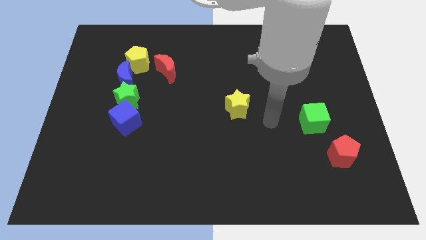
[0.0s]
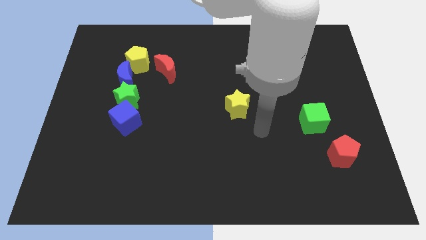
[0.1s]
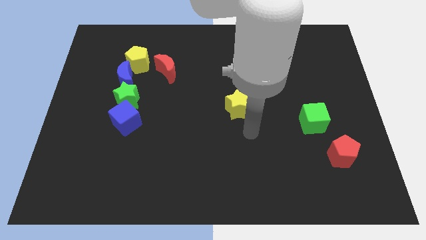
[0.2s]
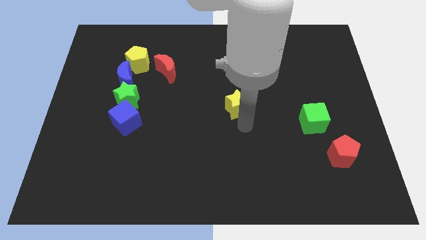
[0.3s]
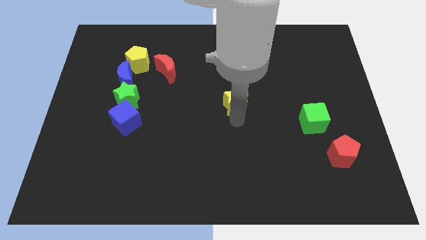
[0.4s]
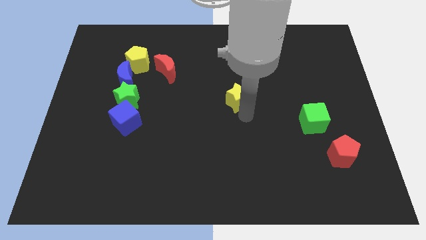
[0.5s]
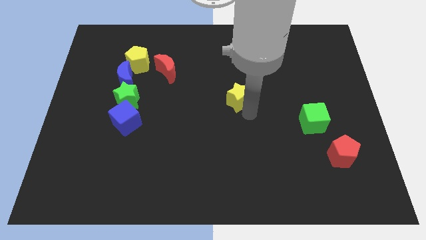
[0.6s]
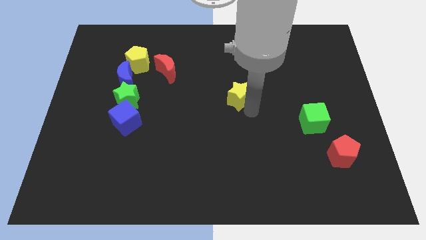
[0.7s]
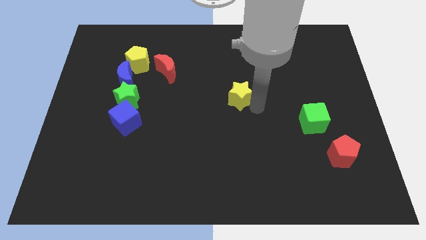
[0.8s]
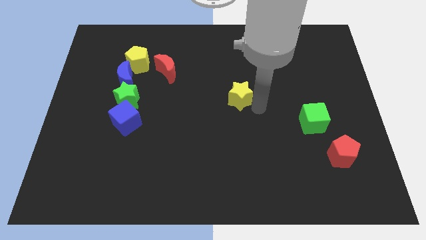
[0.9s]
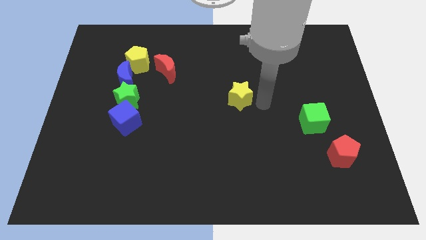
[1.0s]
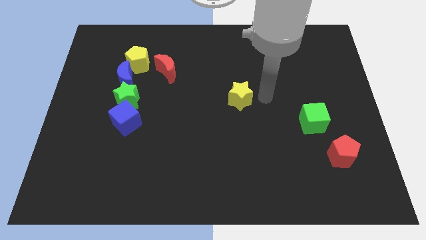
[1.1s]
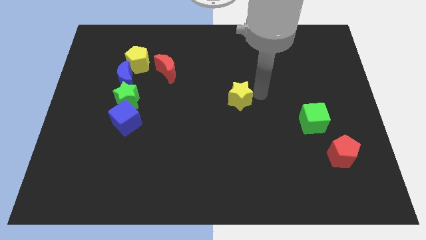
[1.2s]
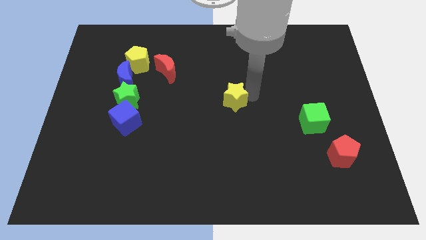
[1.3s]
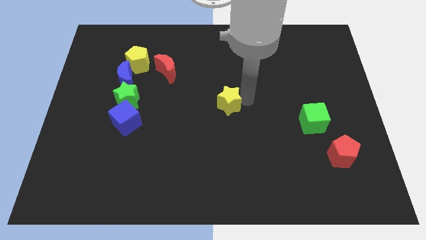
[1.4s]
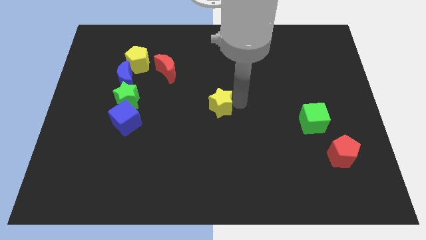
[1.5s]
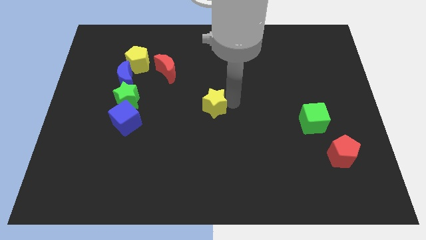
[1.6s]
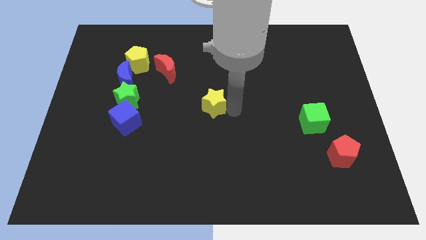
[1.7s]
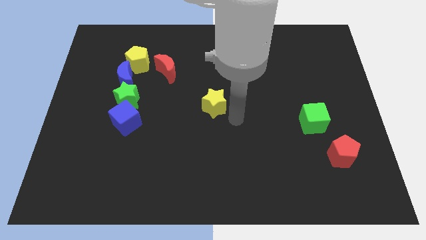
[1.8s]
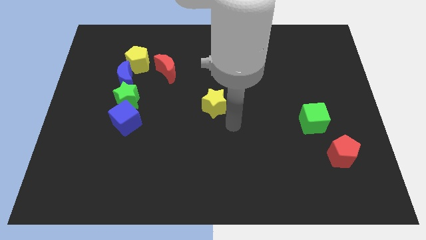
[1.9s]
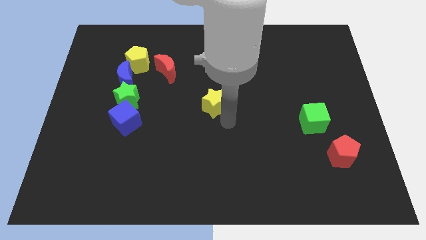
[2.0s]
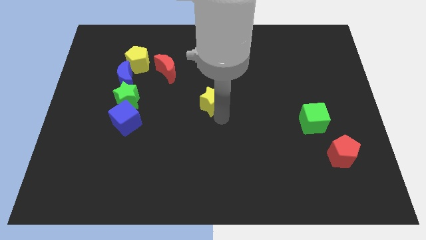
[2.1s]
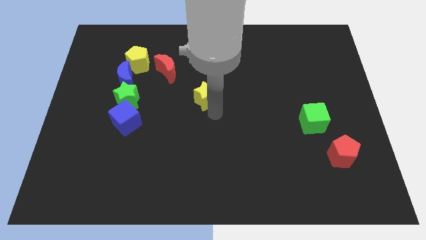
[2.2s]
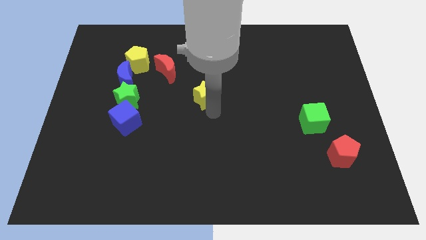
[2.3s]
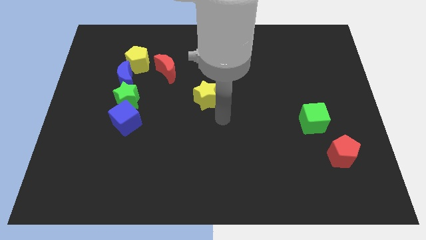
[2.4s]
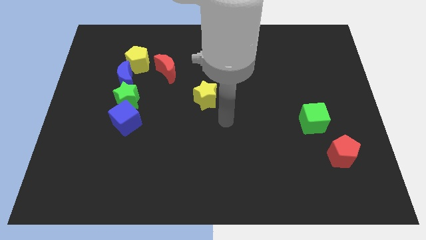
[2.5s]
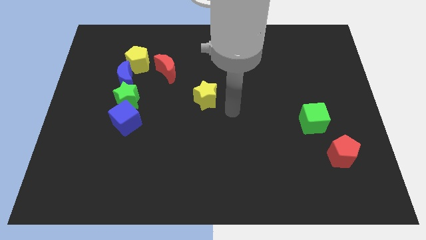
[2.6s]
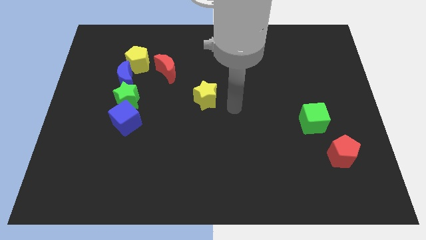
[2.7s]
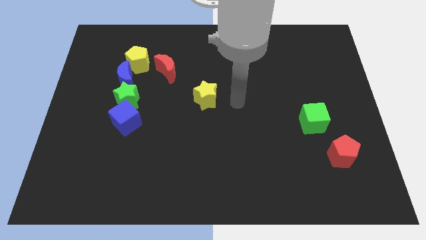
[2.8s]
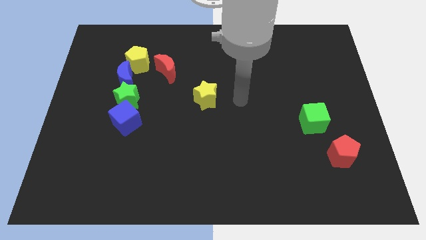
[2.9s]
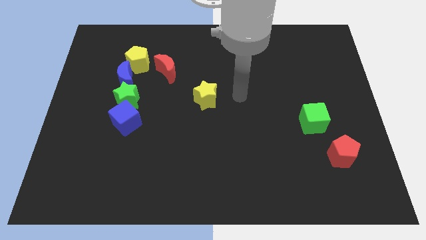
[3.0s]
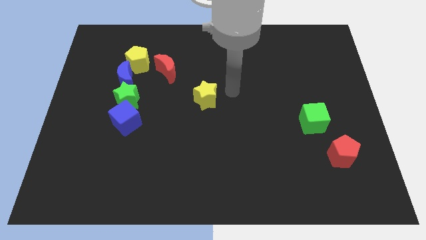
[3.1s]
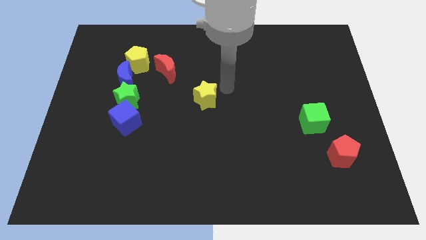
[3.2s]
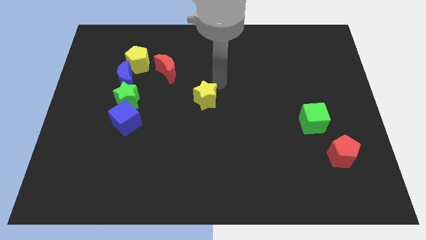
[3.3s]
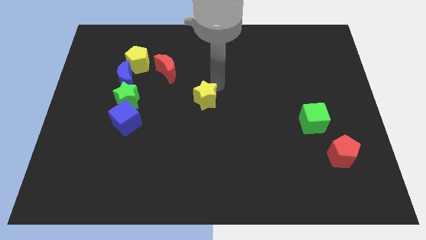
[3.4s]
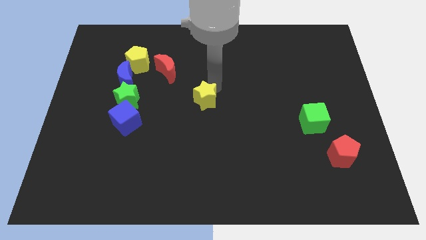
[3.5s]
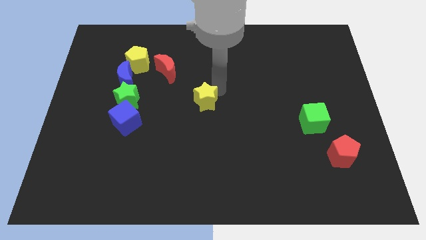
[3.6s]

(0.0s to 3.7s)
put the yellow star to the right of the green star

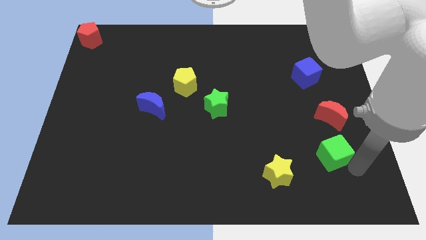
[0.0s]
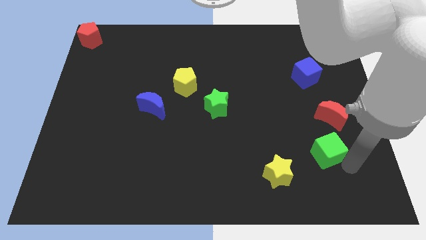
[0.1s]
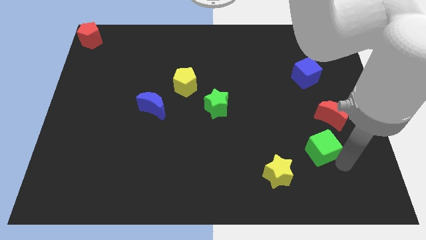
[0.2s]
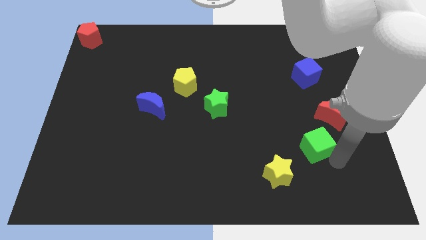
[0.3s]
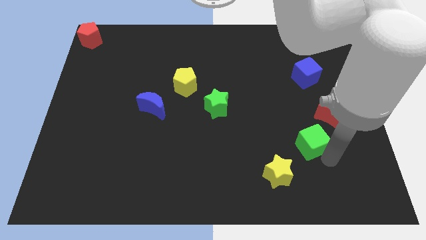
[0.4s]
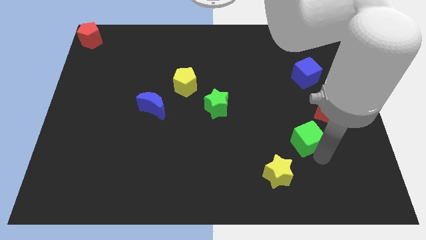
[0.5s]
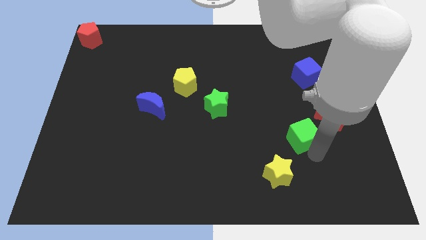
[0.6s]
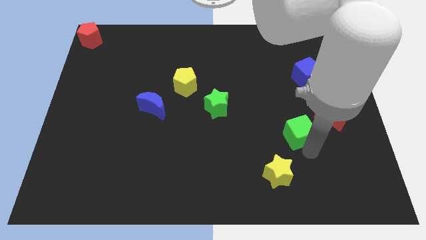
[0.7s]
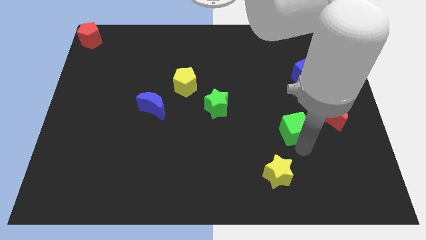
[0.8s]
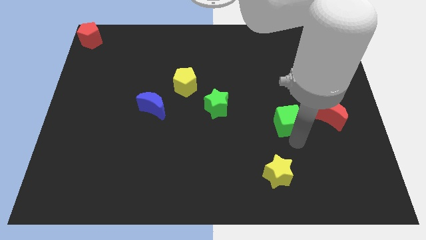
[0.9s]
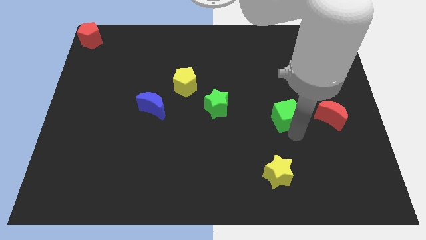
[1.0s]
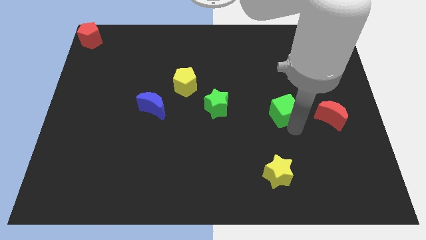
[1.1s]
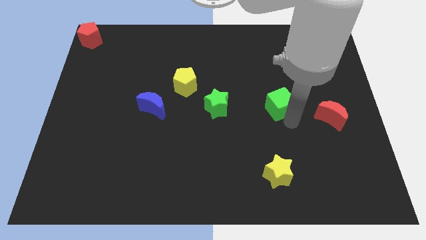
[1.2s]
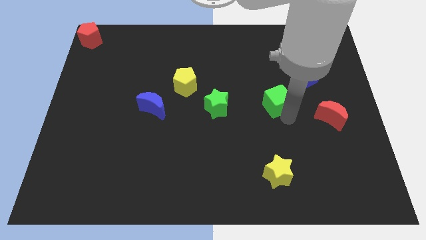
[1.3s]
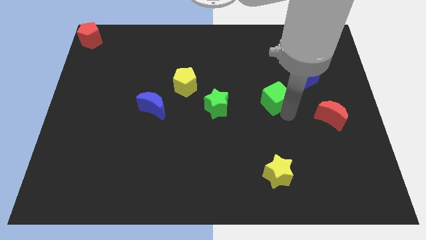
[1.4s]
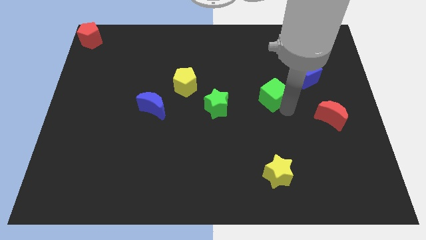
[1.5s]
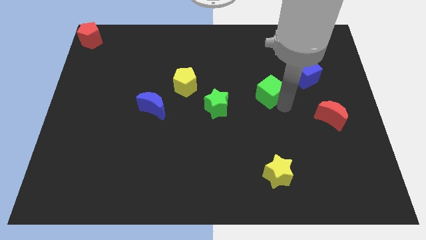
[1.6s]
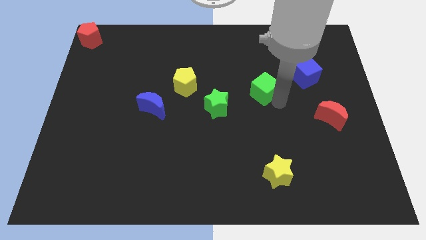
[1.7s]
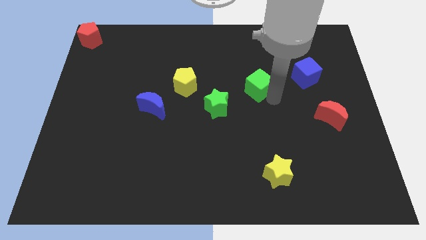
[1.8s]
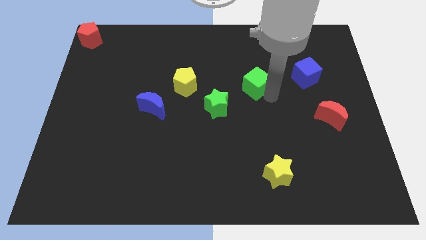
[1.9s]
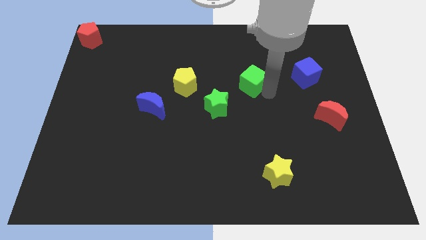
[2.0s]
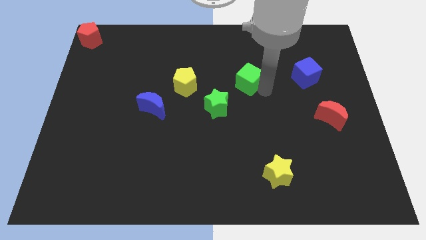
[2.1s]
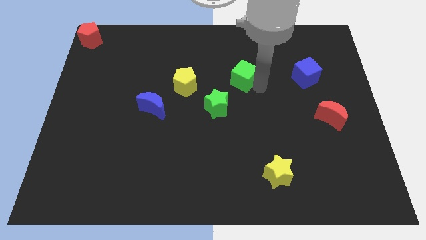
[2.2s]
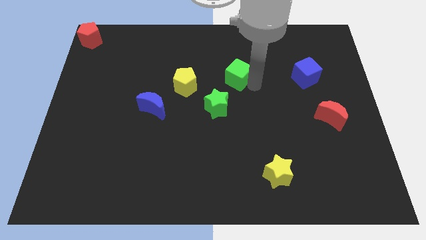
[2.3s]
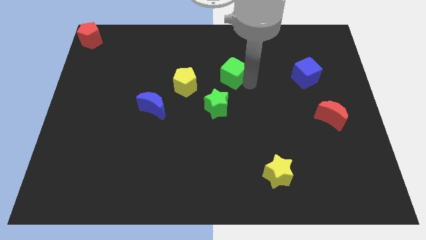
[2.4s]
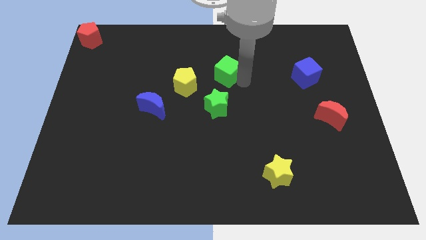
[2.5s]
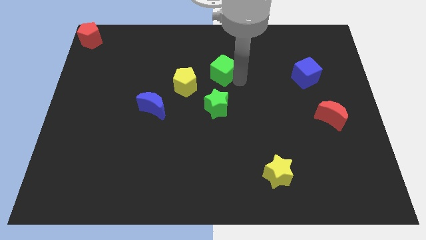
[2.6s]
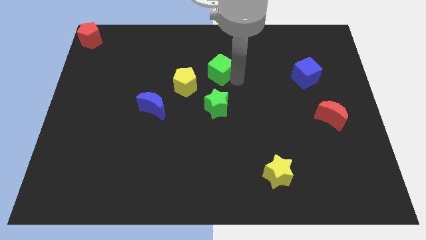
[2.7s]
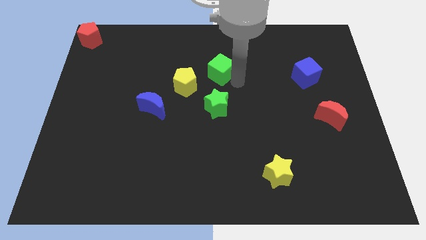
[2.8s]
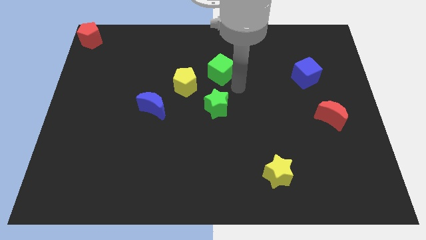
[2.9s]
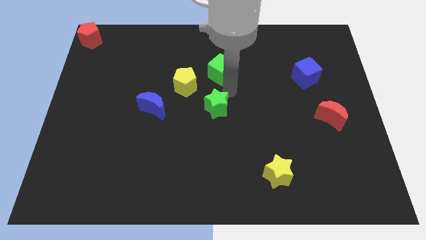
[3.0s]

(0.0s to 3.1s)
move the green cube to the top side of the green star

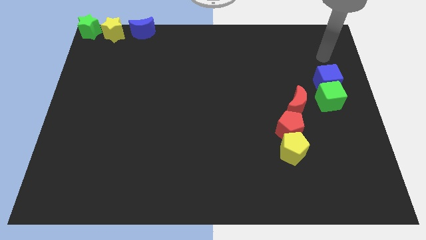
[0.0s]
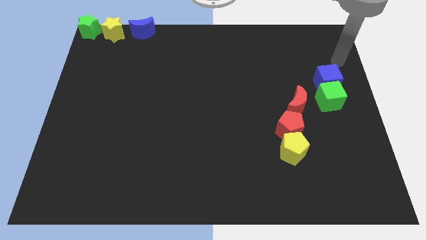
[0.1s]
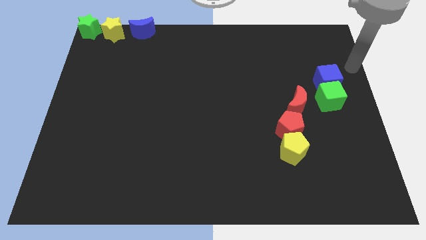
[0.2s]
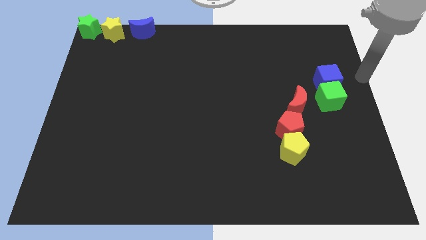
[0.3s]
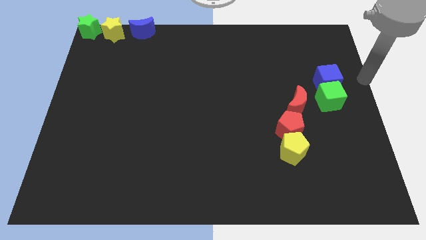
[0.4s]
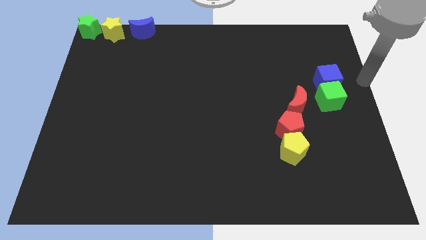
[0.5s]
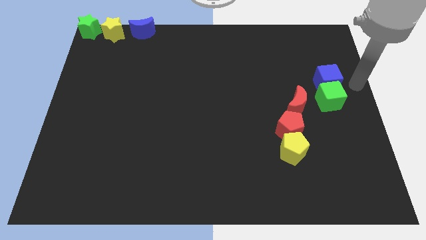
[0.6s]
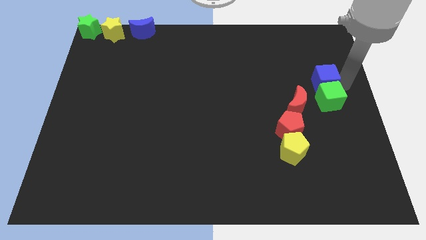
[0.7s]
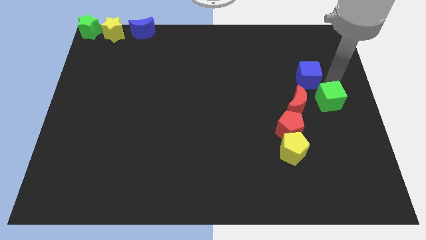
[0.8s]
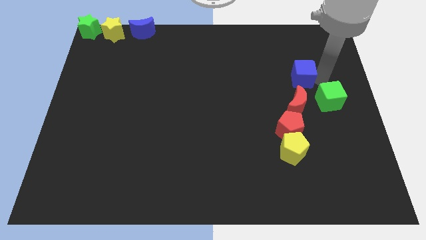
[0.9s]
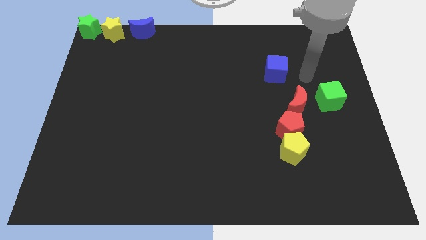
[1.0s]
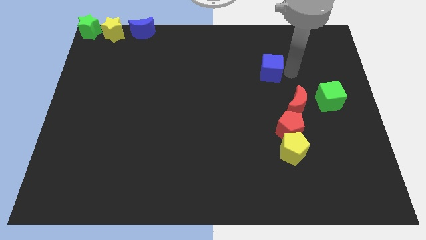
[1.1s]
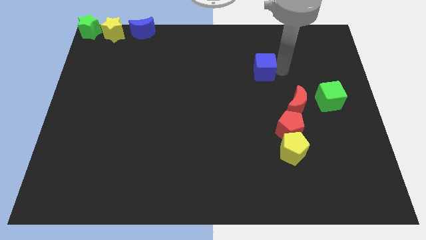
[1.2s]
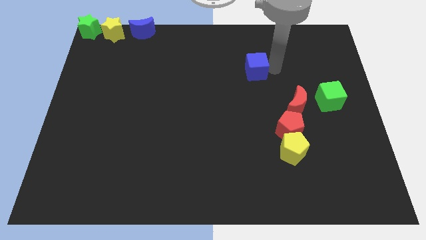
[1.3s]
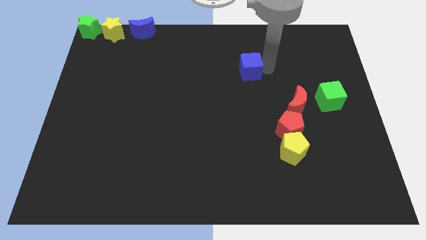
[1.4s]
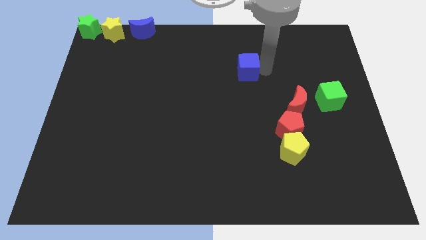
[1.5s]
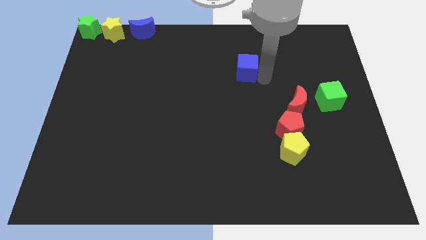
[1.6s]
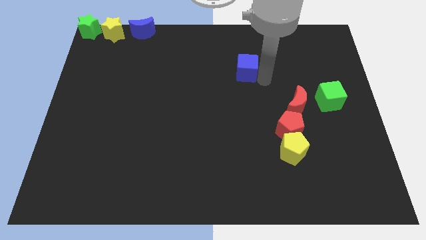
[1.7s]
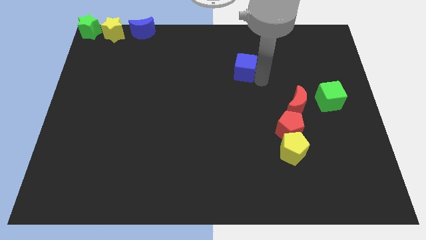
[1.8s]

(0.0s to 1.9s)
separate the blue cube from the green cube

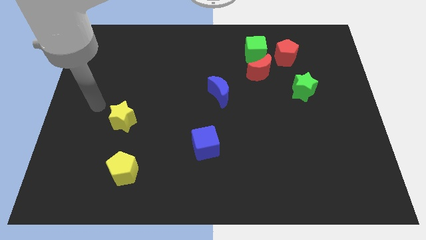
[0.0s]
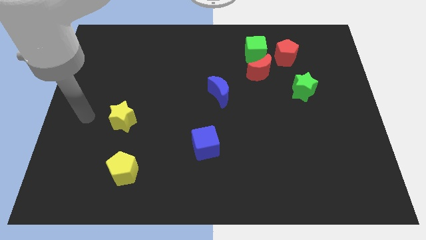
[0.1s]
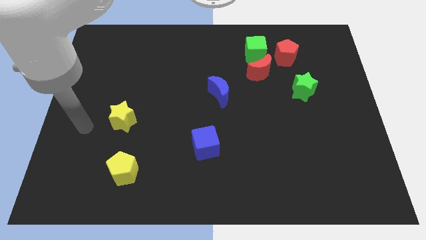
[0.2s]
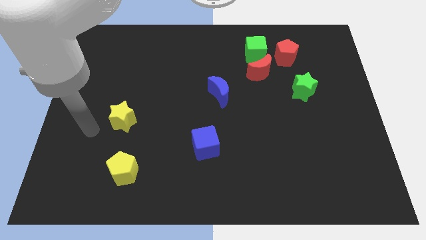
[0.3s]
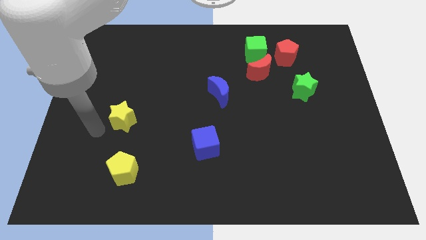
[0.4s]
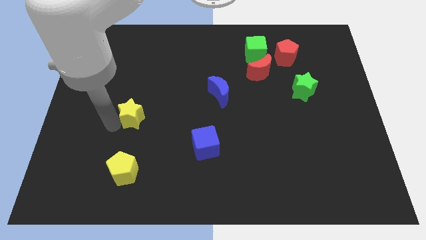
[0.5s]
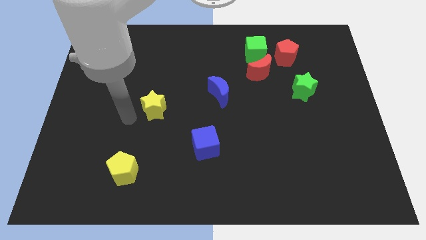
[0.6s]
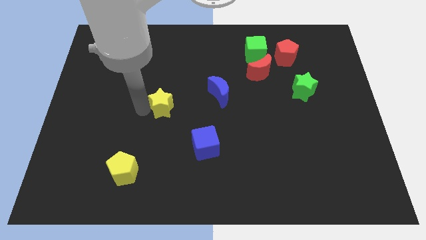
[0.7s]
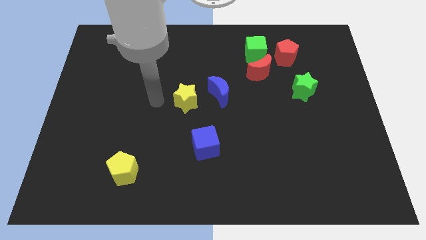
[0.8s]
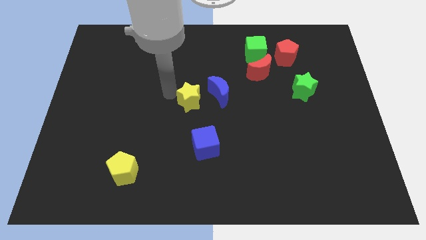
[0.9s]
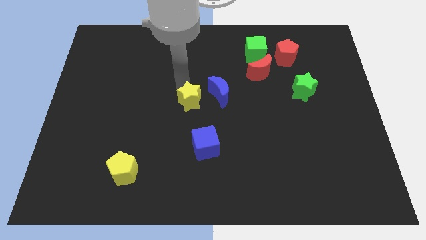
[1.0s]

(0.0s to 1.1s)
place the yellow star to the left side of blue moon
